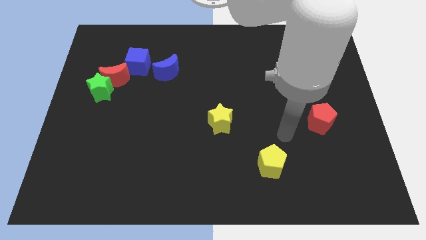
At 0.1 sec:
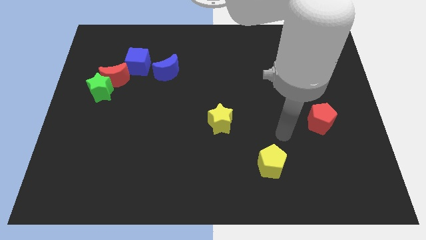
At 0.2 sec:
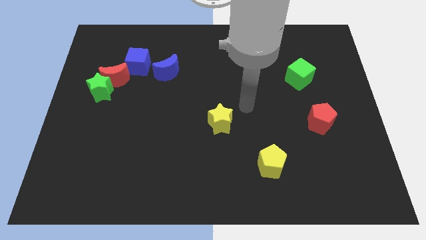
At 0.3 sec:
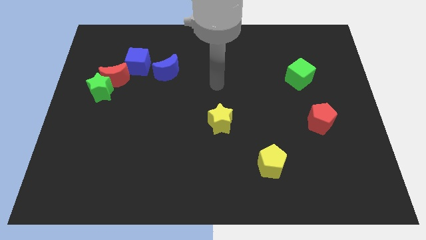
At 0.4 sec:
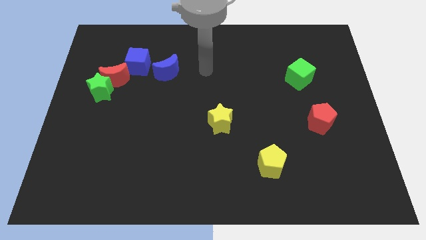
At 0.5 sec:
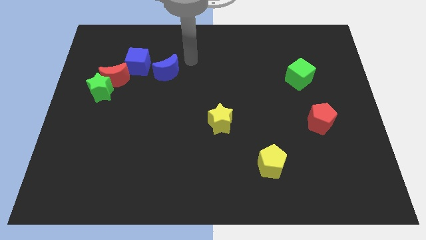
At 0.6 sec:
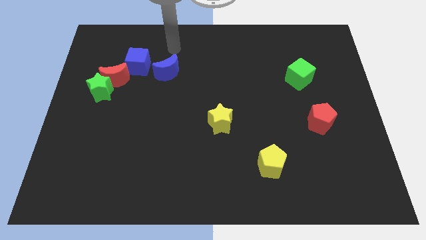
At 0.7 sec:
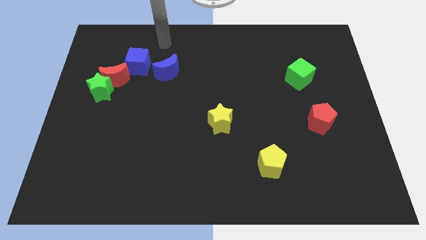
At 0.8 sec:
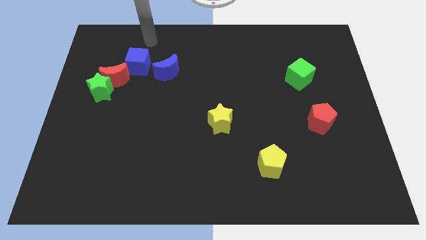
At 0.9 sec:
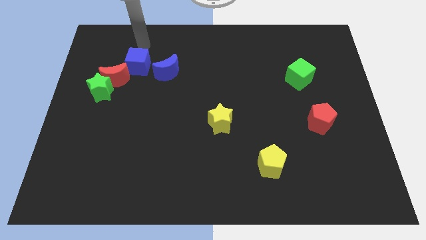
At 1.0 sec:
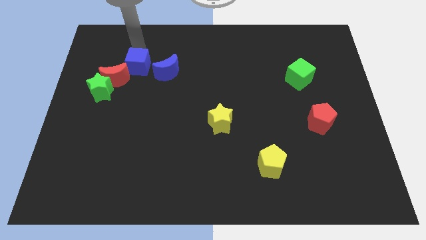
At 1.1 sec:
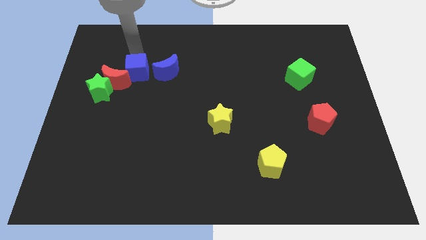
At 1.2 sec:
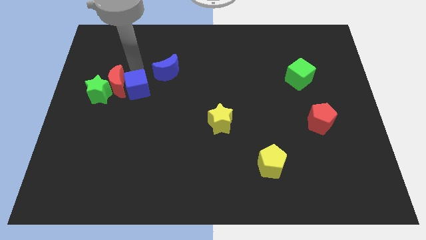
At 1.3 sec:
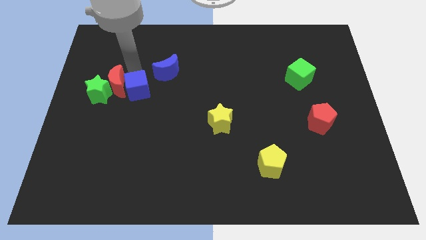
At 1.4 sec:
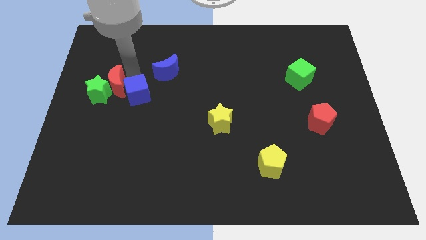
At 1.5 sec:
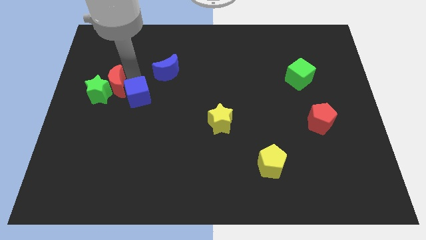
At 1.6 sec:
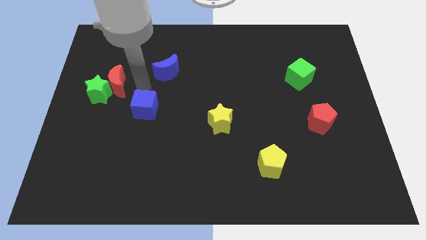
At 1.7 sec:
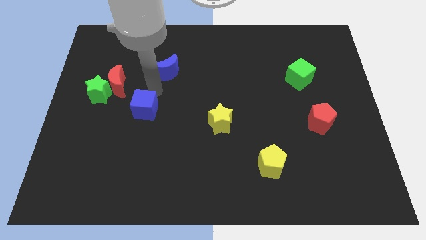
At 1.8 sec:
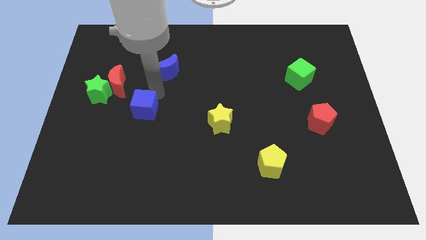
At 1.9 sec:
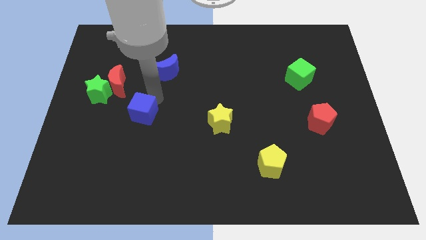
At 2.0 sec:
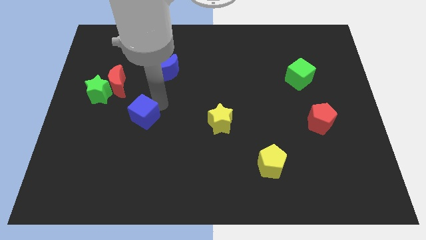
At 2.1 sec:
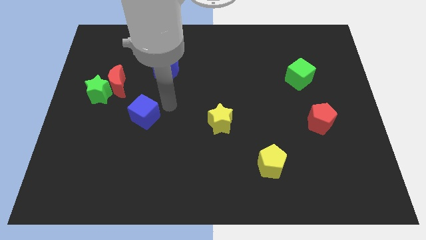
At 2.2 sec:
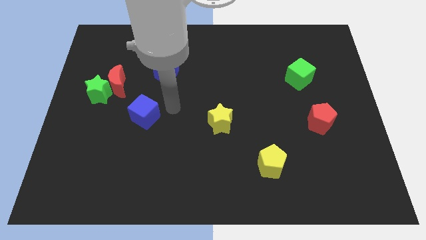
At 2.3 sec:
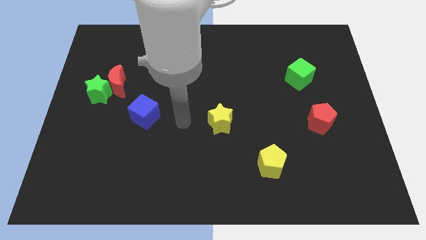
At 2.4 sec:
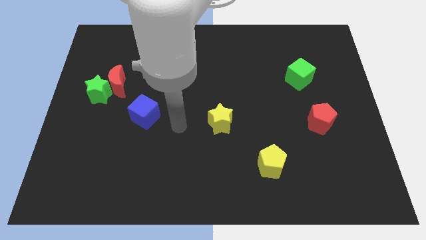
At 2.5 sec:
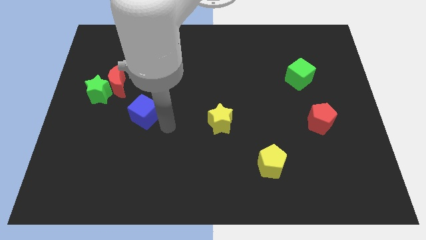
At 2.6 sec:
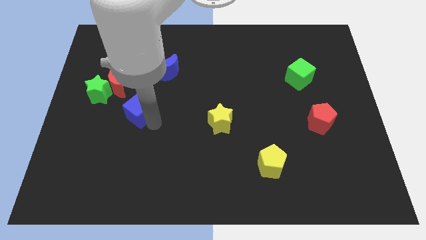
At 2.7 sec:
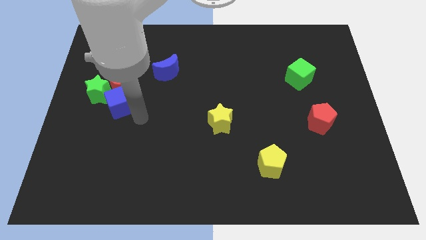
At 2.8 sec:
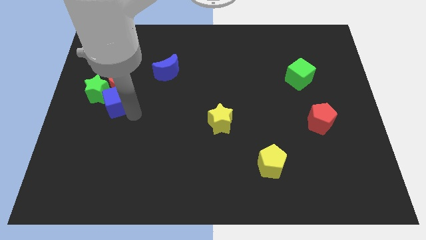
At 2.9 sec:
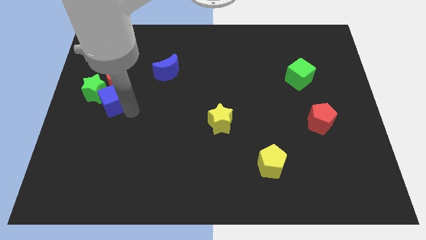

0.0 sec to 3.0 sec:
slide the blue cube next to the green star

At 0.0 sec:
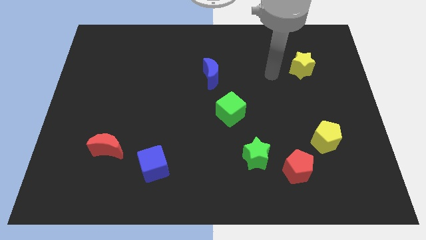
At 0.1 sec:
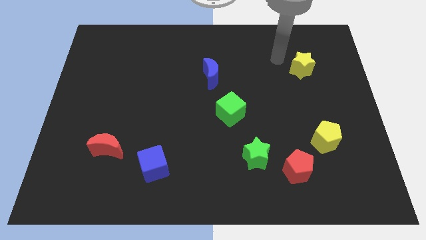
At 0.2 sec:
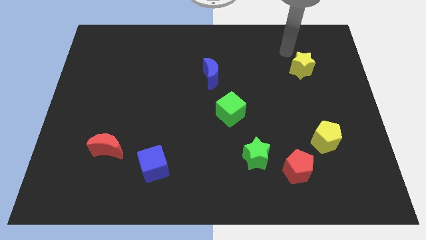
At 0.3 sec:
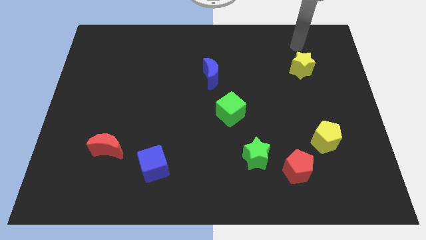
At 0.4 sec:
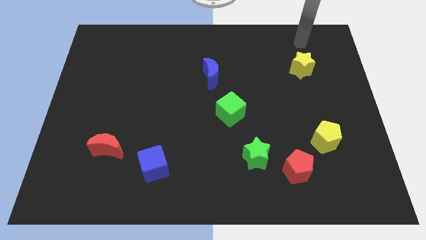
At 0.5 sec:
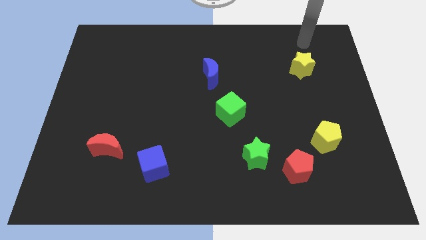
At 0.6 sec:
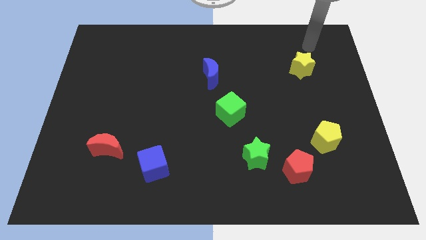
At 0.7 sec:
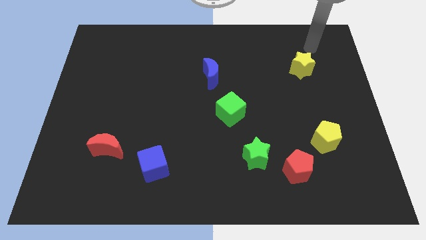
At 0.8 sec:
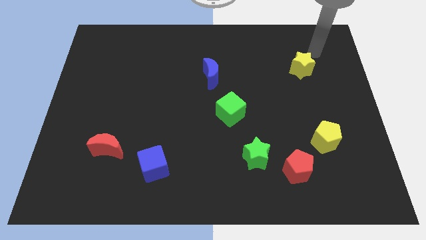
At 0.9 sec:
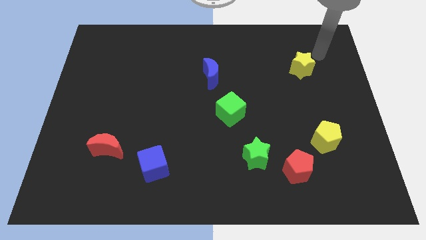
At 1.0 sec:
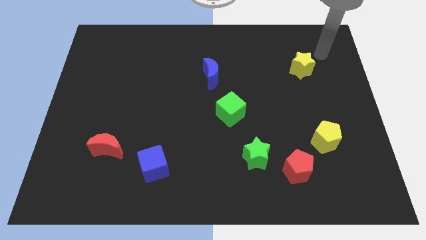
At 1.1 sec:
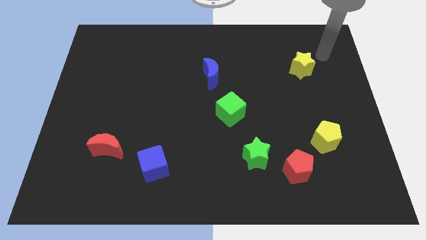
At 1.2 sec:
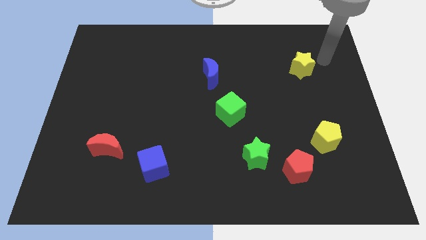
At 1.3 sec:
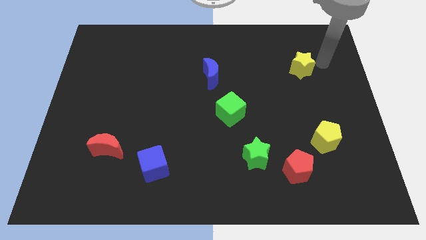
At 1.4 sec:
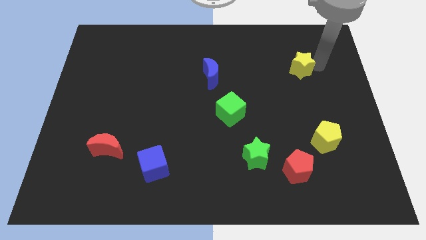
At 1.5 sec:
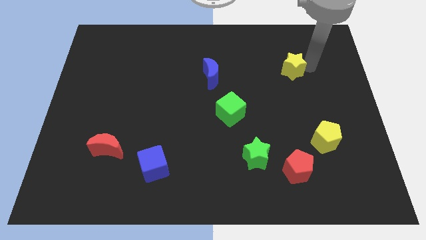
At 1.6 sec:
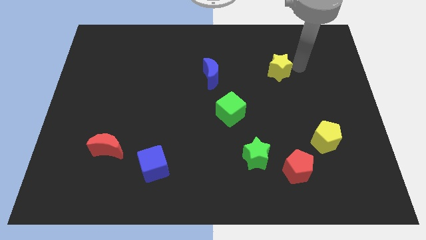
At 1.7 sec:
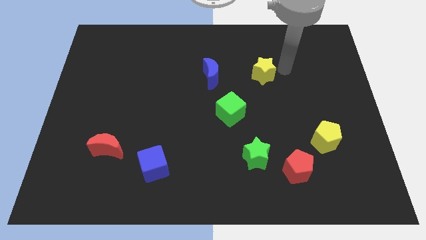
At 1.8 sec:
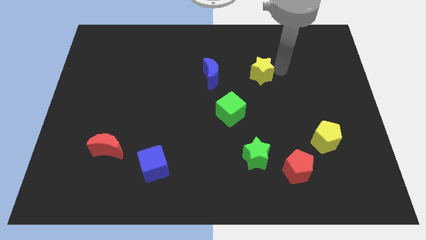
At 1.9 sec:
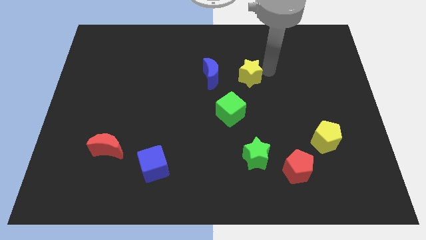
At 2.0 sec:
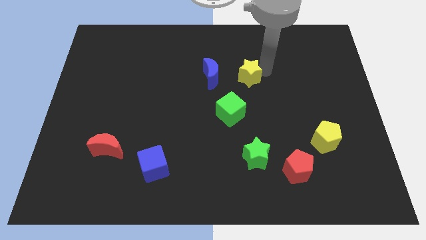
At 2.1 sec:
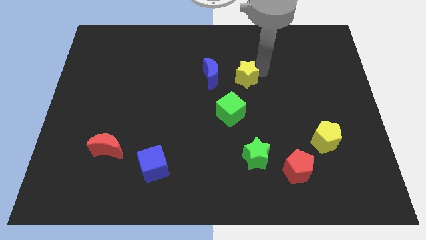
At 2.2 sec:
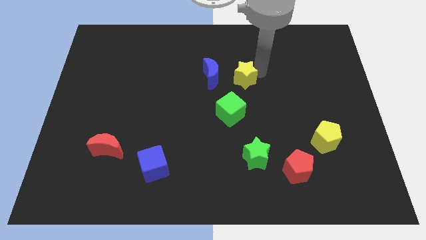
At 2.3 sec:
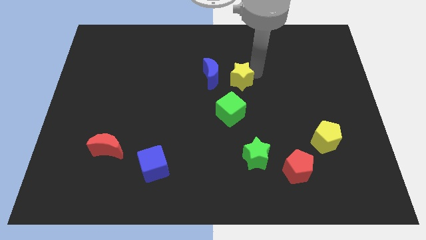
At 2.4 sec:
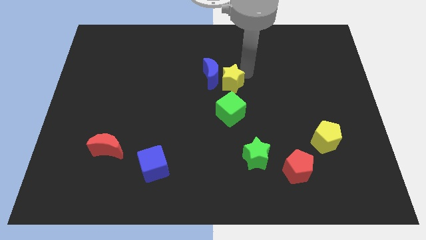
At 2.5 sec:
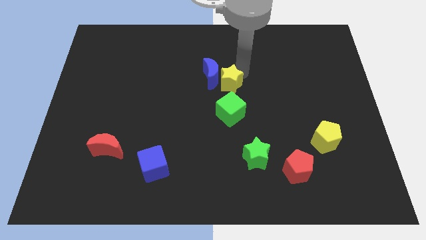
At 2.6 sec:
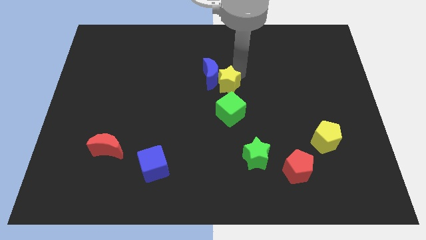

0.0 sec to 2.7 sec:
move the yellow star close to the blue moon

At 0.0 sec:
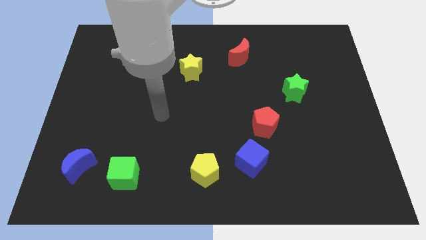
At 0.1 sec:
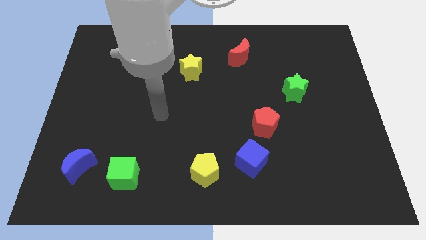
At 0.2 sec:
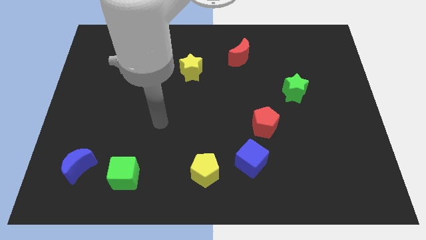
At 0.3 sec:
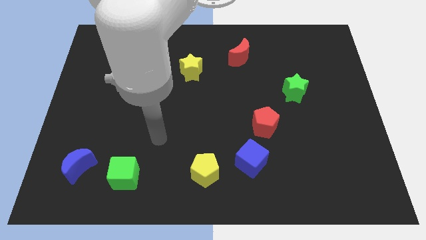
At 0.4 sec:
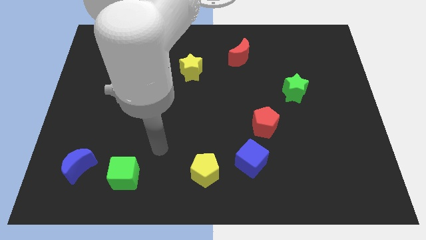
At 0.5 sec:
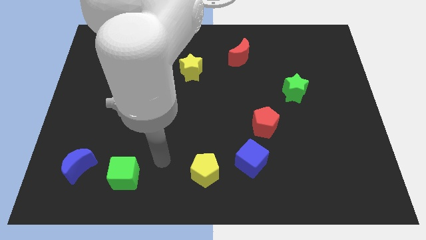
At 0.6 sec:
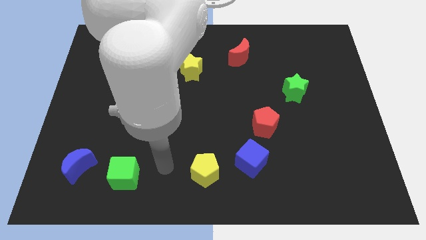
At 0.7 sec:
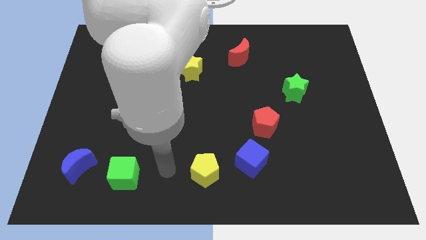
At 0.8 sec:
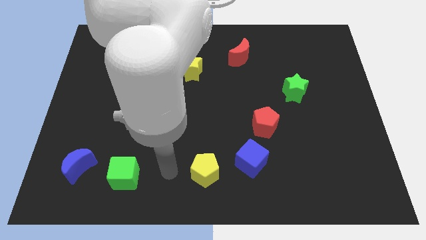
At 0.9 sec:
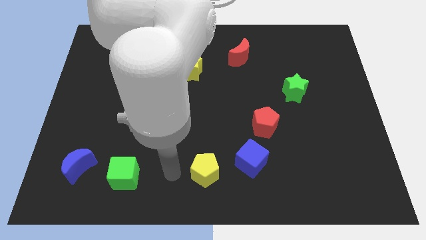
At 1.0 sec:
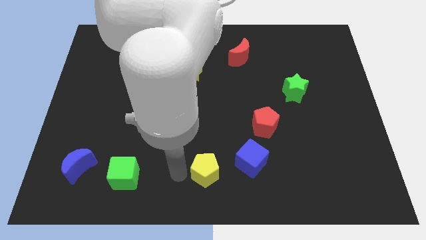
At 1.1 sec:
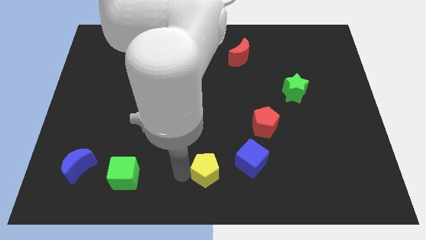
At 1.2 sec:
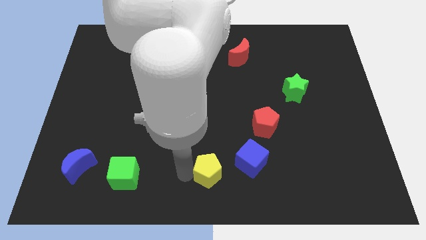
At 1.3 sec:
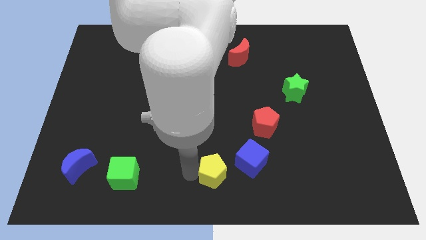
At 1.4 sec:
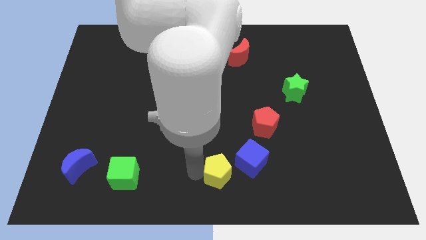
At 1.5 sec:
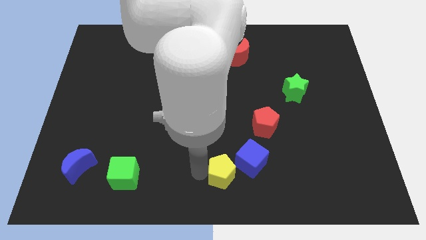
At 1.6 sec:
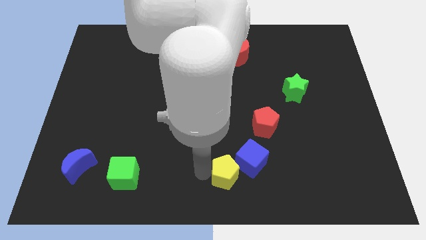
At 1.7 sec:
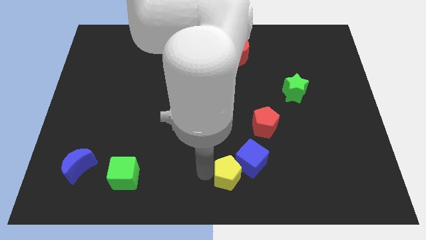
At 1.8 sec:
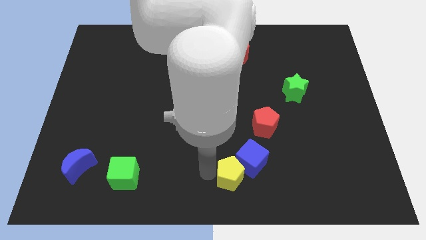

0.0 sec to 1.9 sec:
push the yellow pentagon next to the blue cube

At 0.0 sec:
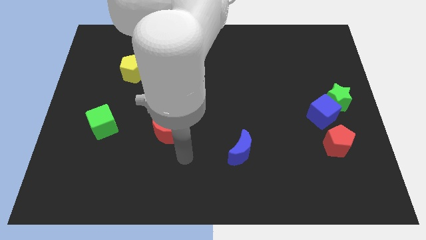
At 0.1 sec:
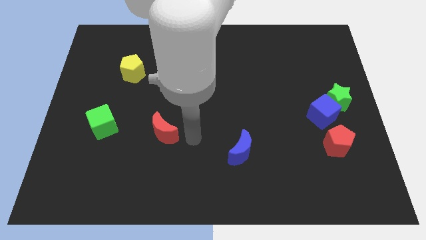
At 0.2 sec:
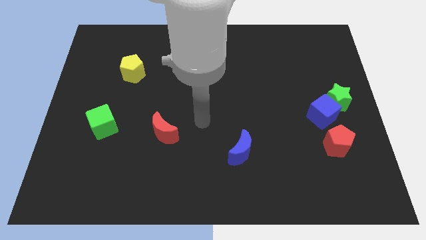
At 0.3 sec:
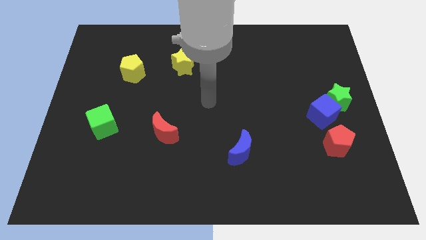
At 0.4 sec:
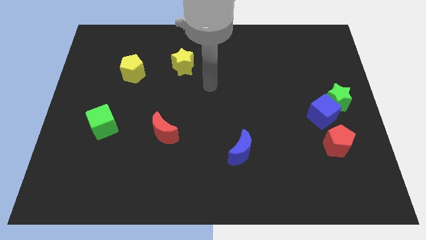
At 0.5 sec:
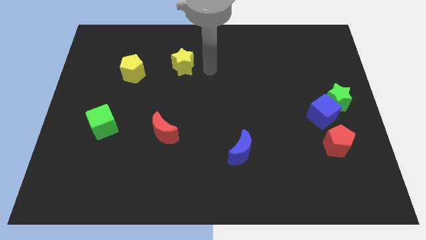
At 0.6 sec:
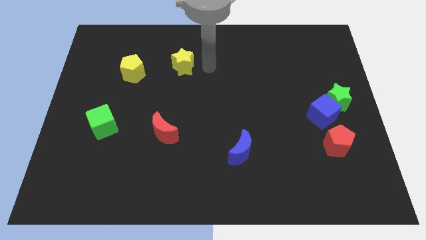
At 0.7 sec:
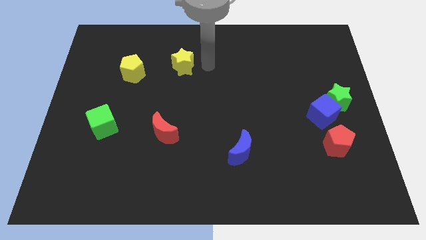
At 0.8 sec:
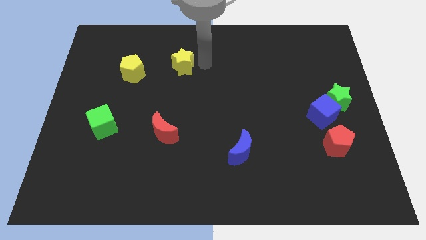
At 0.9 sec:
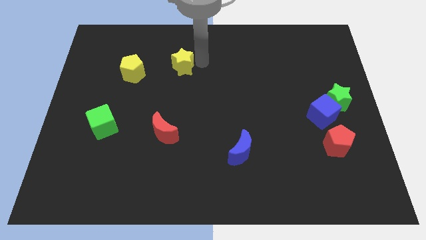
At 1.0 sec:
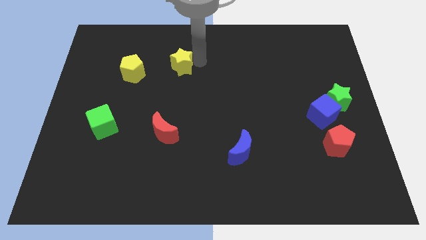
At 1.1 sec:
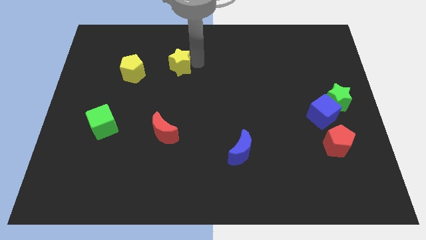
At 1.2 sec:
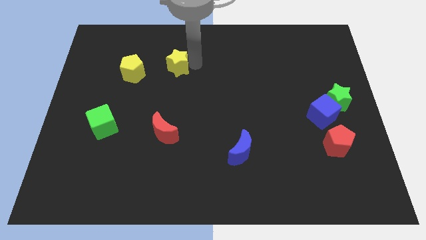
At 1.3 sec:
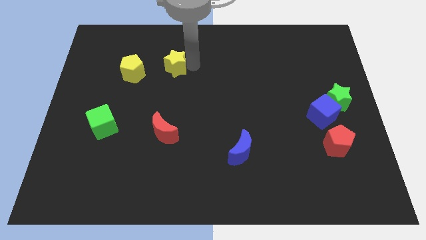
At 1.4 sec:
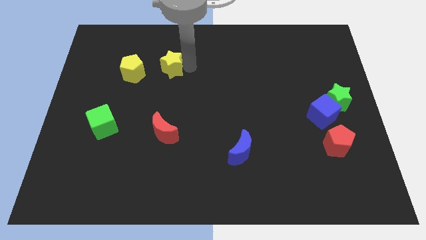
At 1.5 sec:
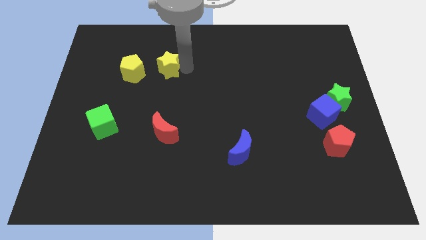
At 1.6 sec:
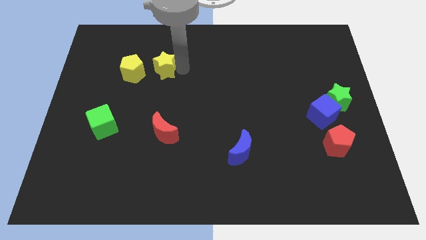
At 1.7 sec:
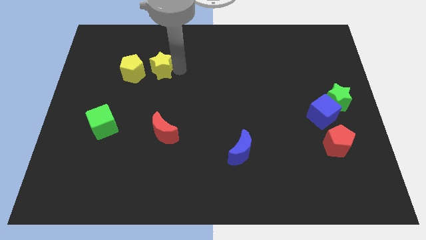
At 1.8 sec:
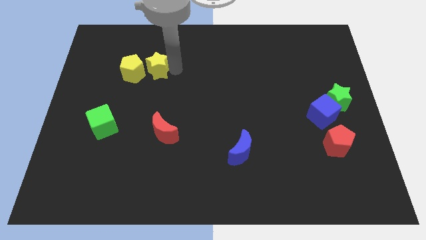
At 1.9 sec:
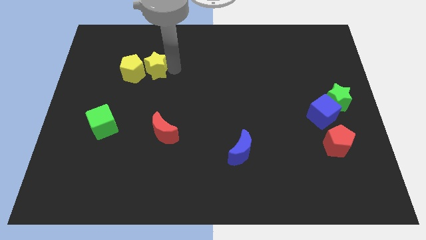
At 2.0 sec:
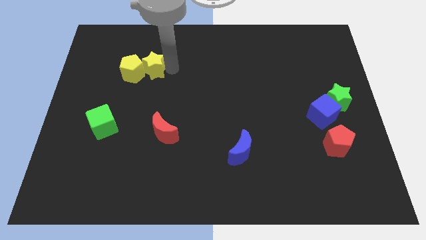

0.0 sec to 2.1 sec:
push the yellow star towards the yellow pentagon
